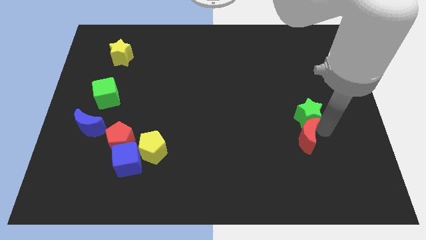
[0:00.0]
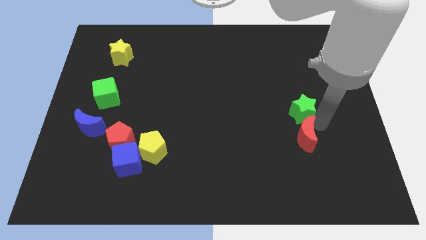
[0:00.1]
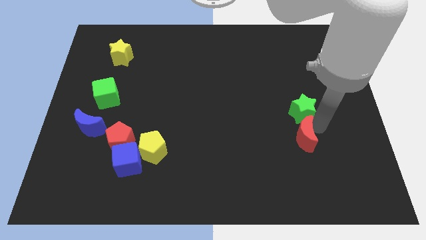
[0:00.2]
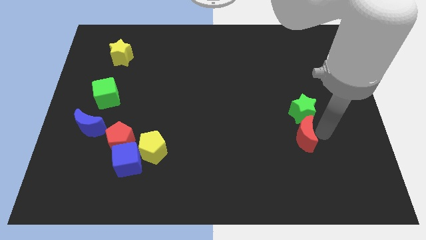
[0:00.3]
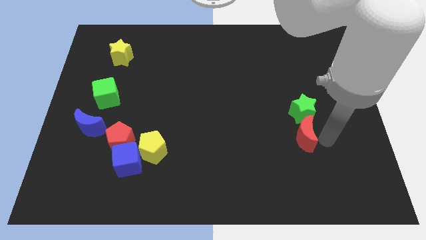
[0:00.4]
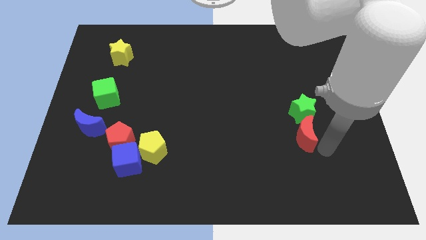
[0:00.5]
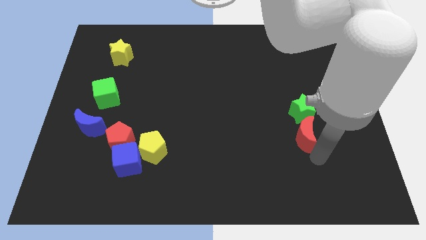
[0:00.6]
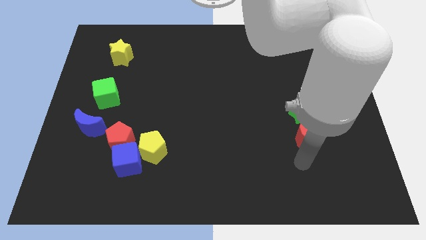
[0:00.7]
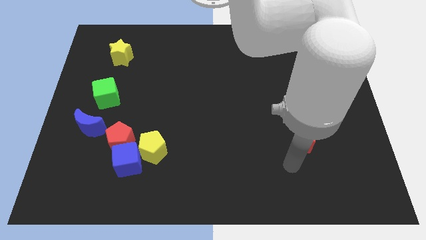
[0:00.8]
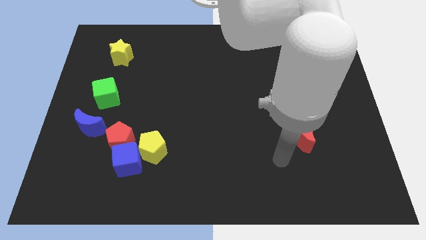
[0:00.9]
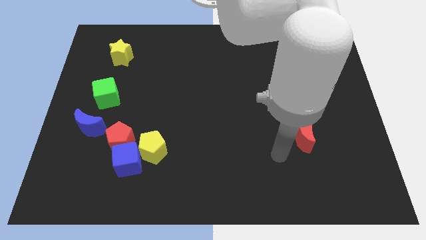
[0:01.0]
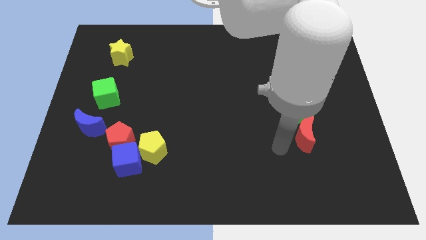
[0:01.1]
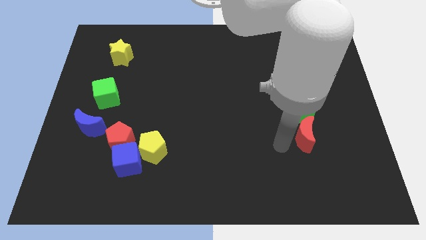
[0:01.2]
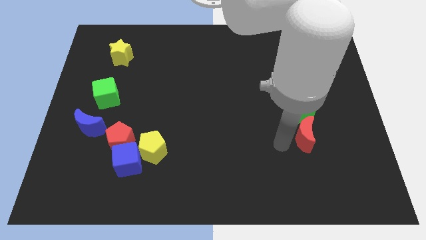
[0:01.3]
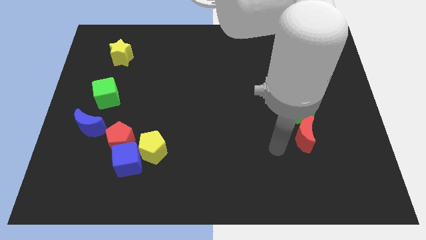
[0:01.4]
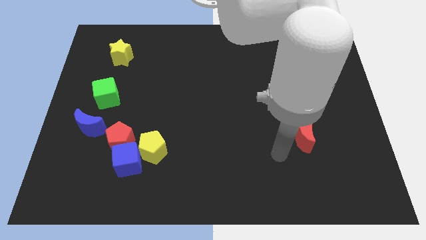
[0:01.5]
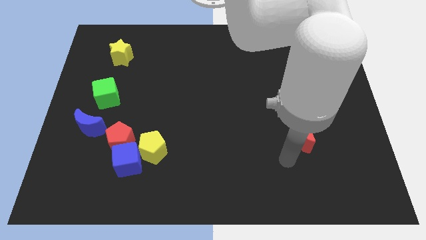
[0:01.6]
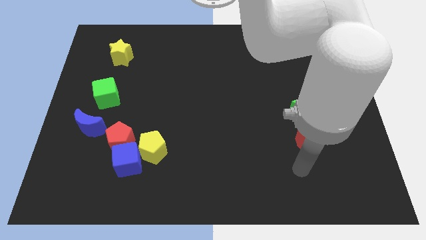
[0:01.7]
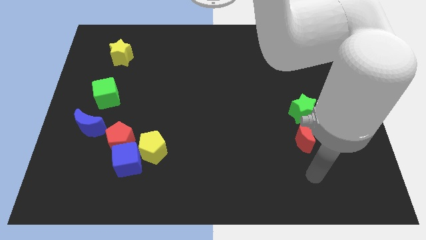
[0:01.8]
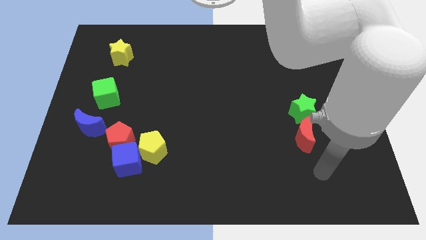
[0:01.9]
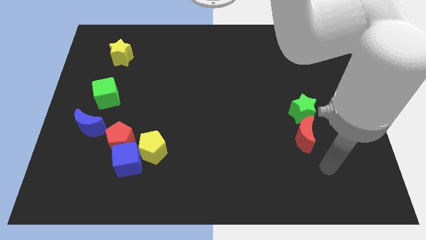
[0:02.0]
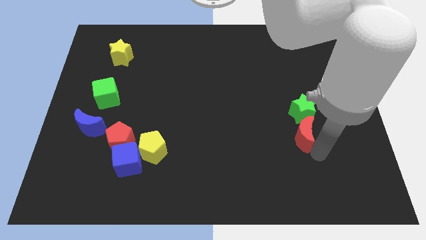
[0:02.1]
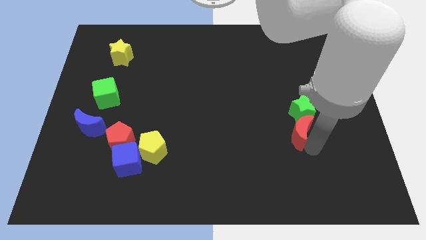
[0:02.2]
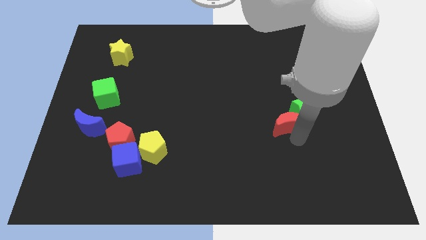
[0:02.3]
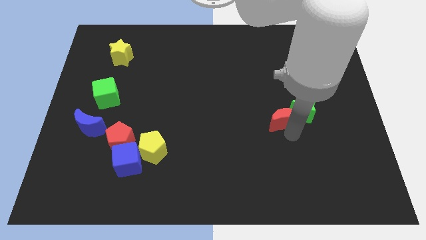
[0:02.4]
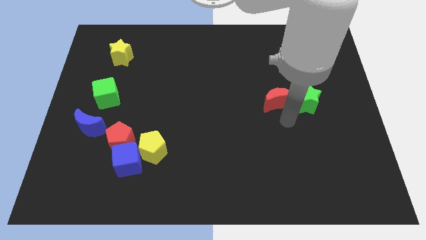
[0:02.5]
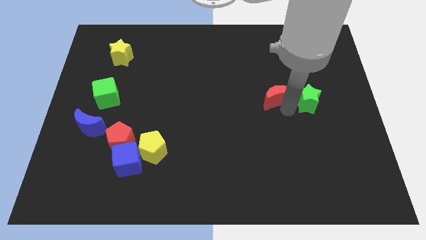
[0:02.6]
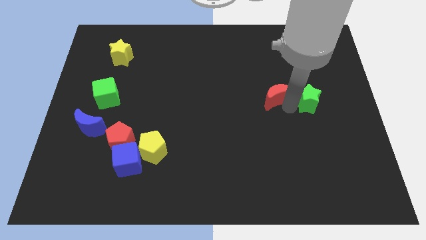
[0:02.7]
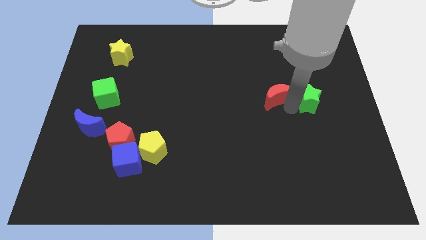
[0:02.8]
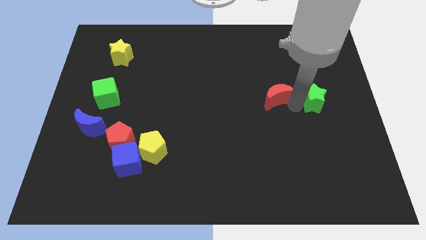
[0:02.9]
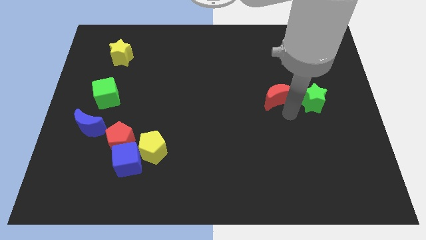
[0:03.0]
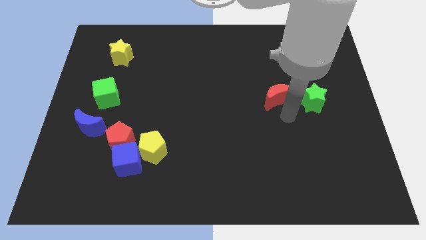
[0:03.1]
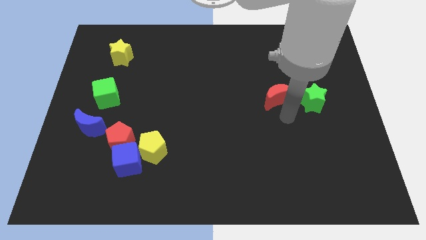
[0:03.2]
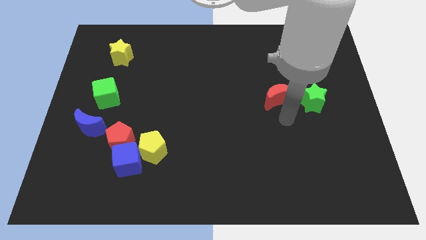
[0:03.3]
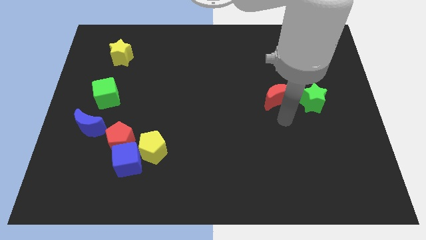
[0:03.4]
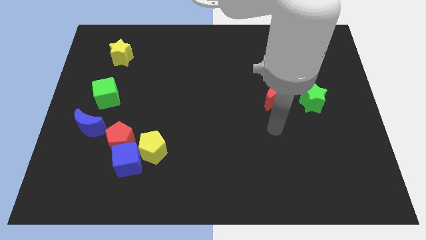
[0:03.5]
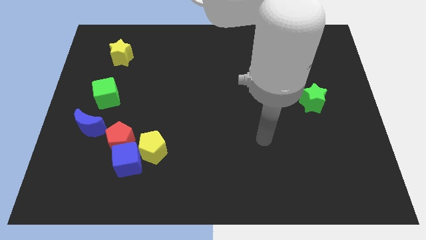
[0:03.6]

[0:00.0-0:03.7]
push the red crescent to the left of the green star

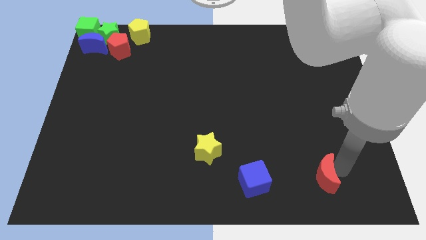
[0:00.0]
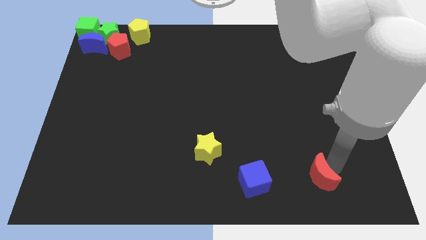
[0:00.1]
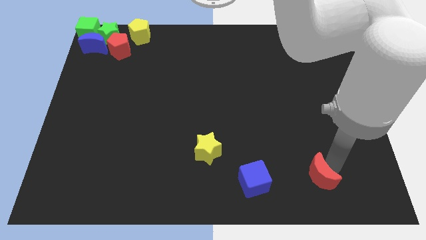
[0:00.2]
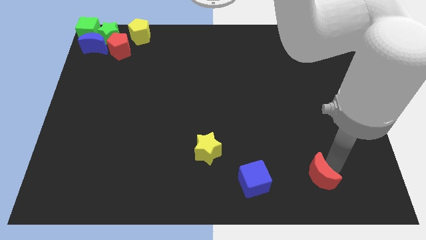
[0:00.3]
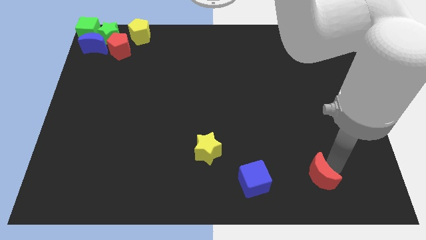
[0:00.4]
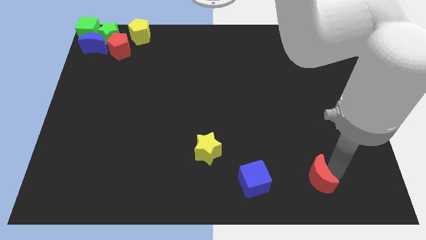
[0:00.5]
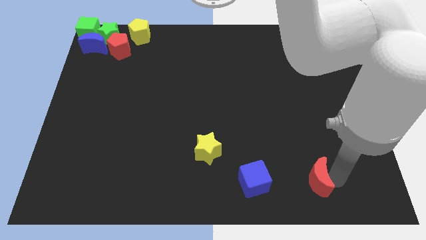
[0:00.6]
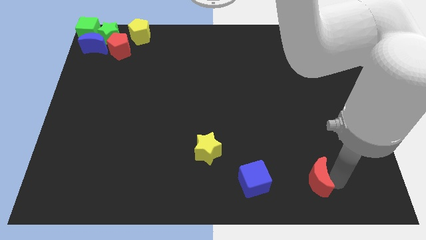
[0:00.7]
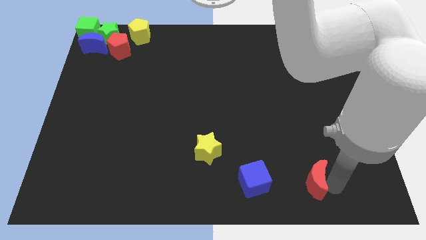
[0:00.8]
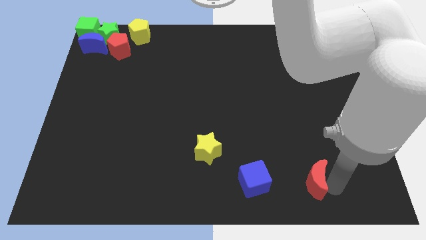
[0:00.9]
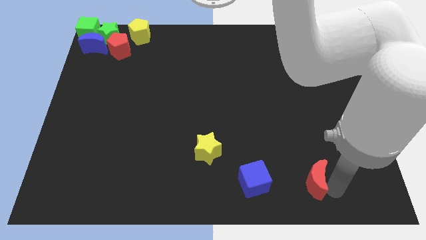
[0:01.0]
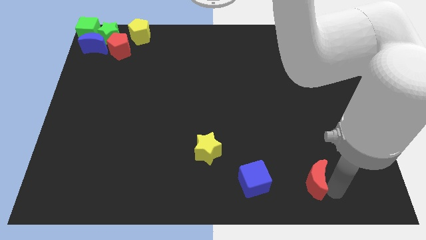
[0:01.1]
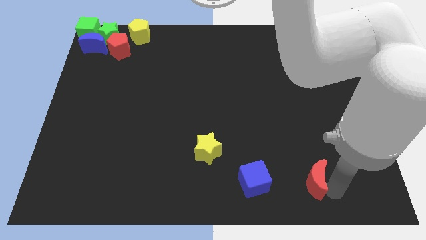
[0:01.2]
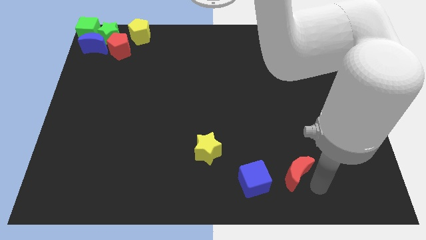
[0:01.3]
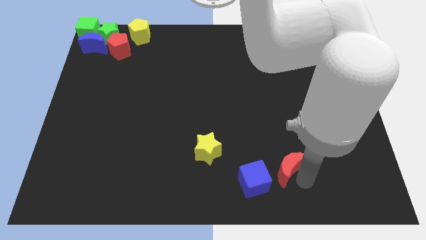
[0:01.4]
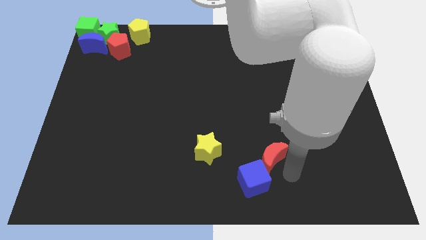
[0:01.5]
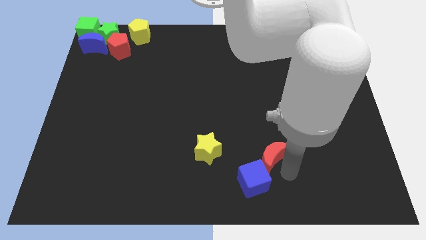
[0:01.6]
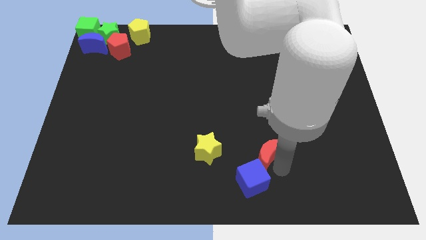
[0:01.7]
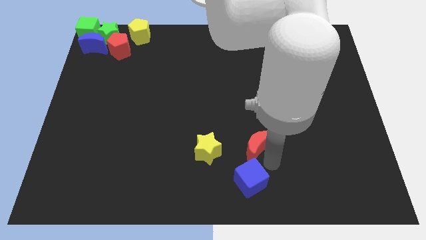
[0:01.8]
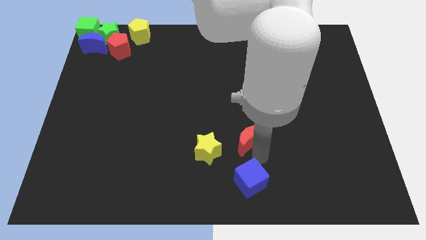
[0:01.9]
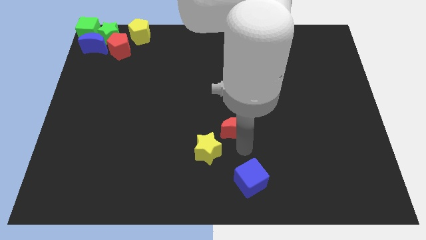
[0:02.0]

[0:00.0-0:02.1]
push red crescent above blue cube

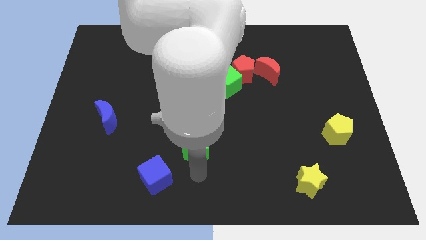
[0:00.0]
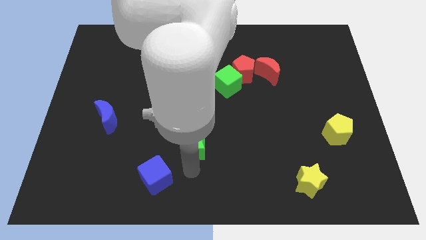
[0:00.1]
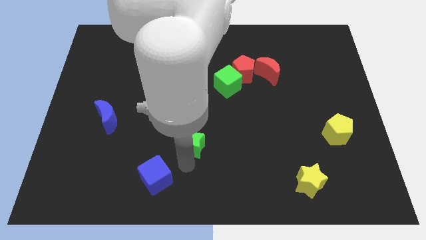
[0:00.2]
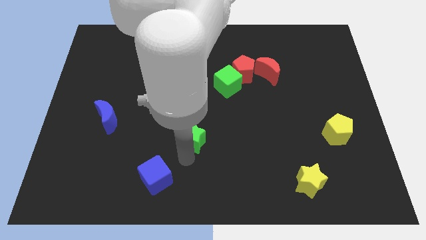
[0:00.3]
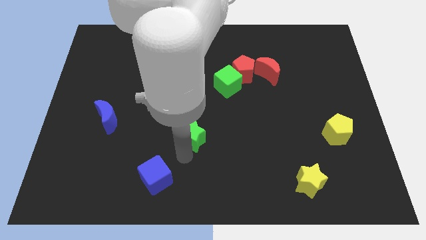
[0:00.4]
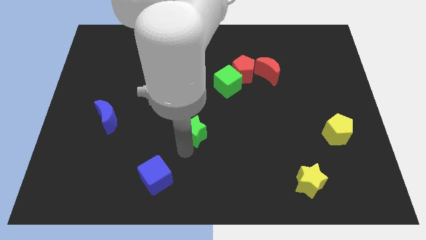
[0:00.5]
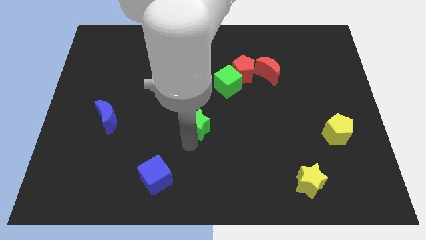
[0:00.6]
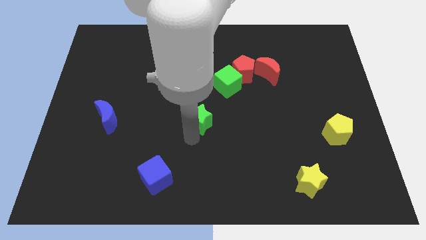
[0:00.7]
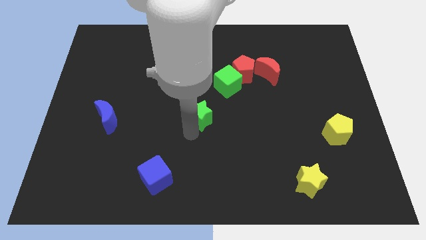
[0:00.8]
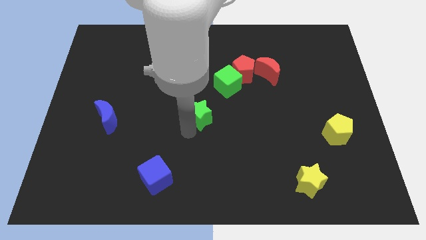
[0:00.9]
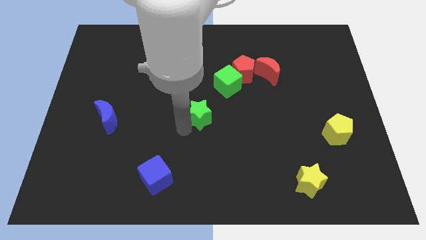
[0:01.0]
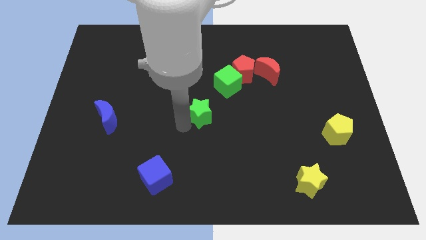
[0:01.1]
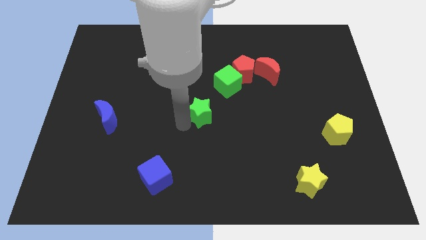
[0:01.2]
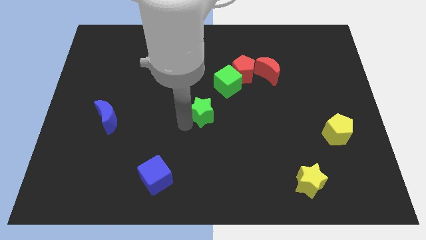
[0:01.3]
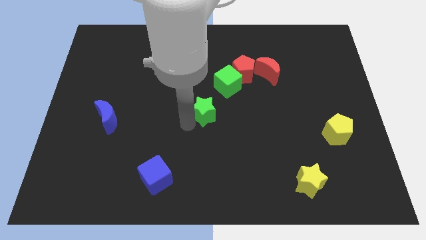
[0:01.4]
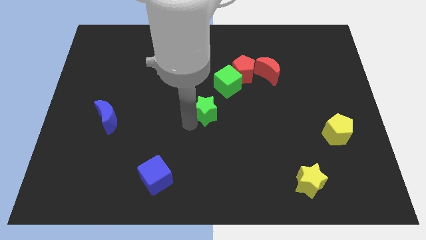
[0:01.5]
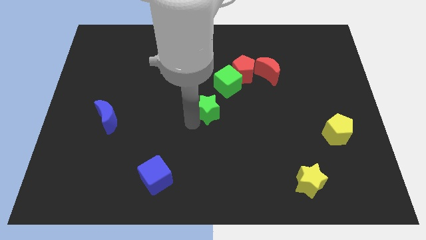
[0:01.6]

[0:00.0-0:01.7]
push the green star closer to the green cube

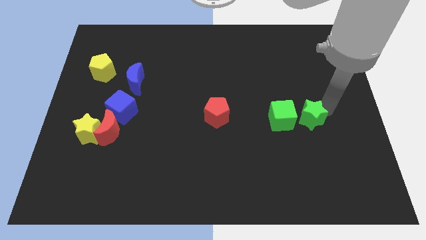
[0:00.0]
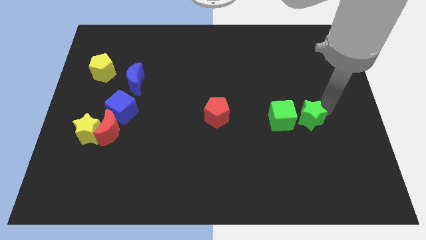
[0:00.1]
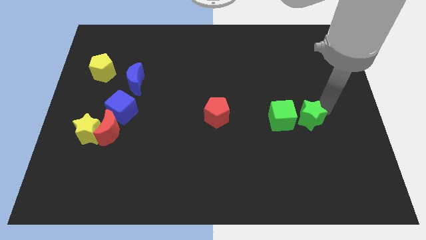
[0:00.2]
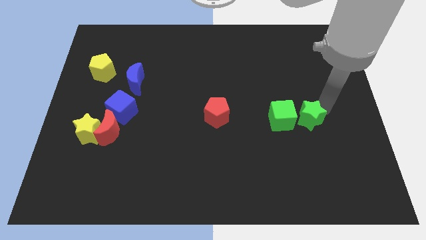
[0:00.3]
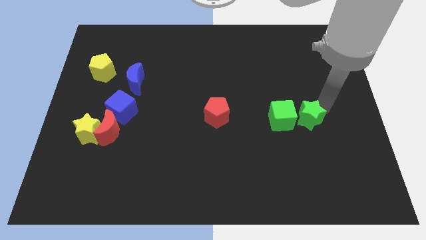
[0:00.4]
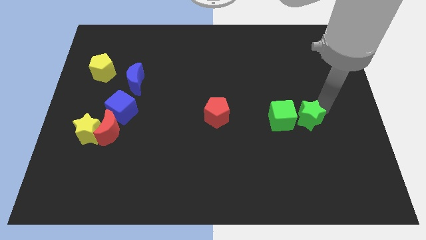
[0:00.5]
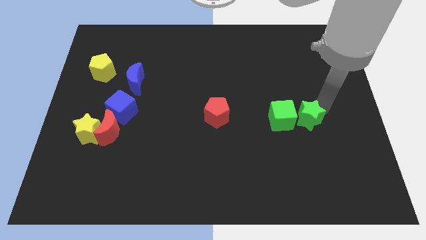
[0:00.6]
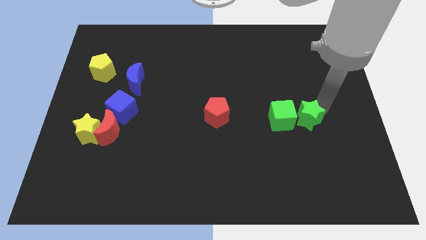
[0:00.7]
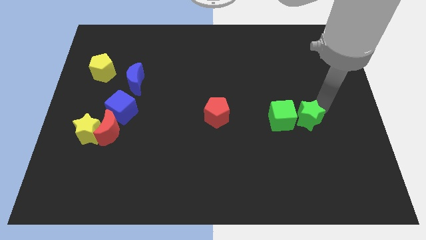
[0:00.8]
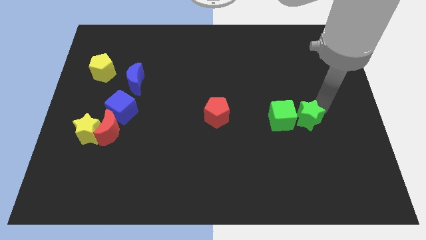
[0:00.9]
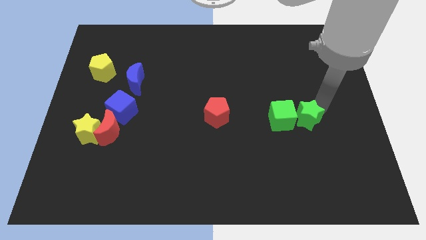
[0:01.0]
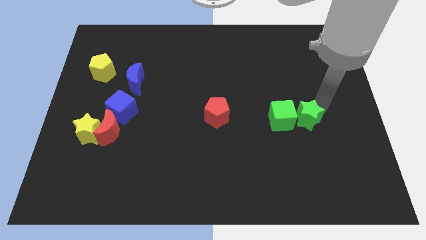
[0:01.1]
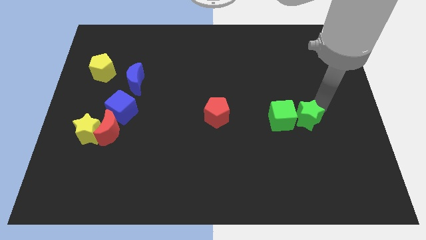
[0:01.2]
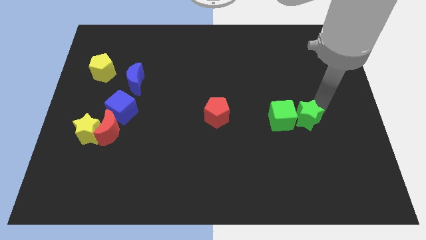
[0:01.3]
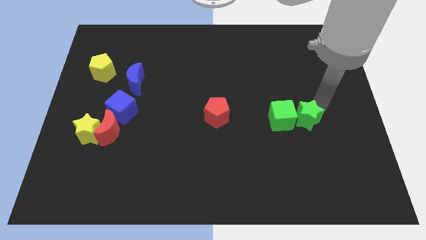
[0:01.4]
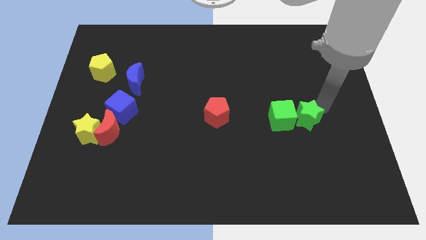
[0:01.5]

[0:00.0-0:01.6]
push the green star close to the green cube
